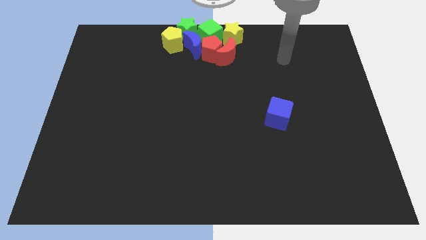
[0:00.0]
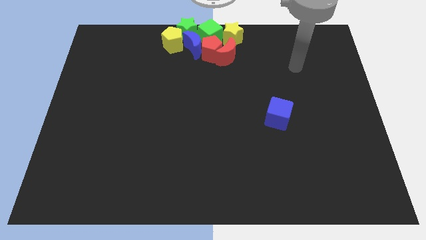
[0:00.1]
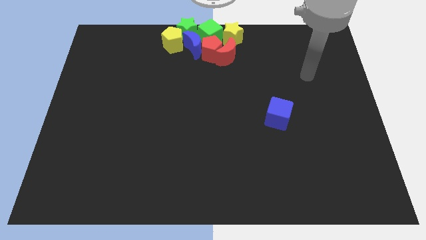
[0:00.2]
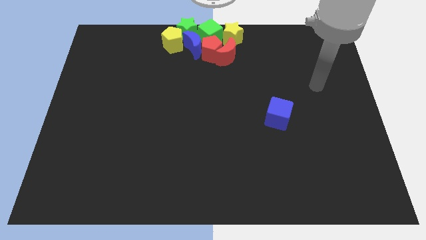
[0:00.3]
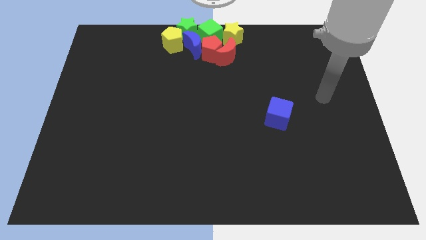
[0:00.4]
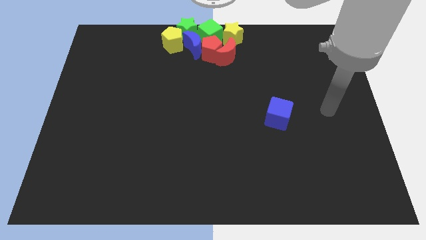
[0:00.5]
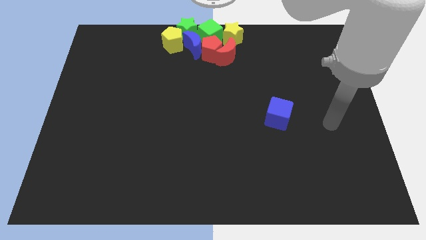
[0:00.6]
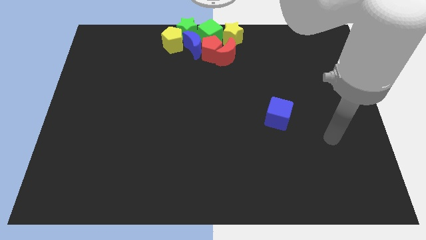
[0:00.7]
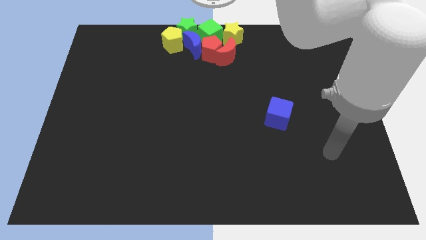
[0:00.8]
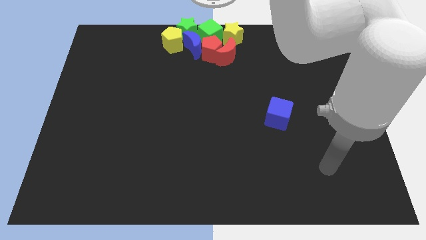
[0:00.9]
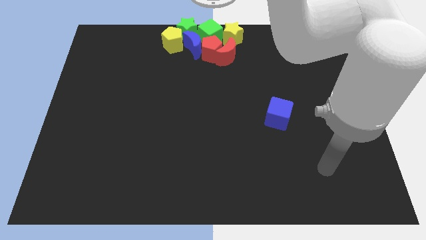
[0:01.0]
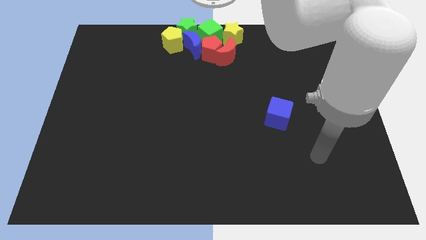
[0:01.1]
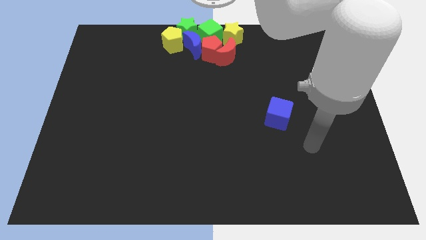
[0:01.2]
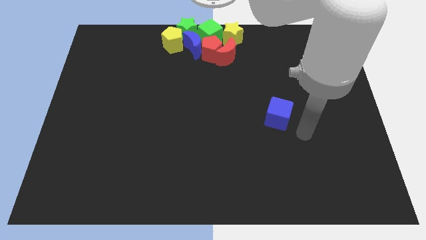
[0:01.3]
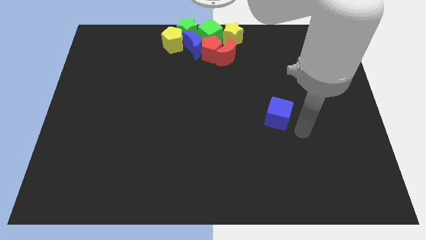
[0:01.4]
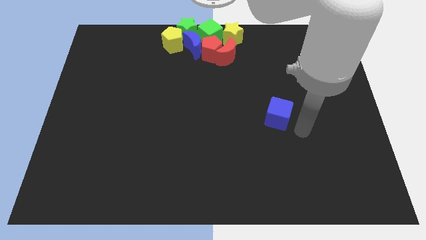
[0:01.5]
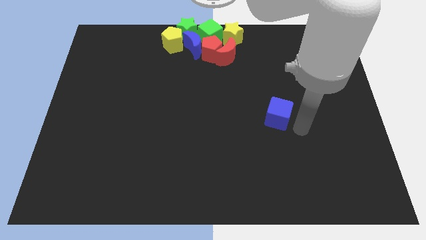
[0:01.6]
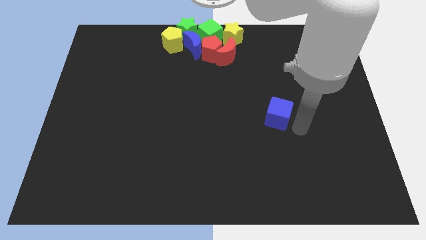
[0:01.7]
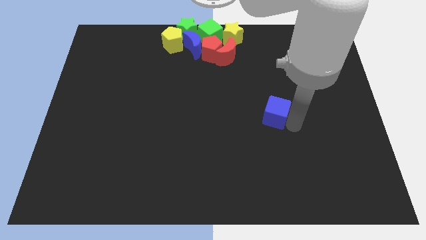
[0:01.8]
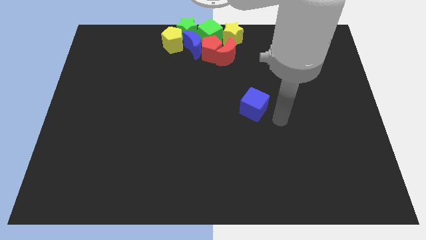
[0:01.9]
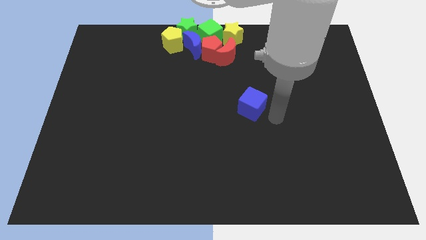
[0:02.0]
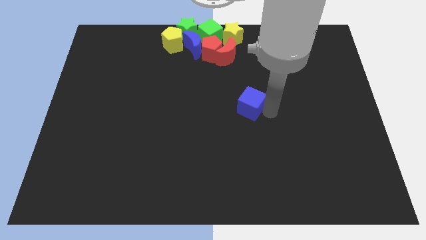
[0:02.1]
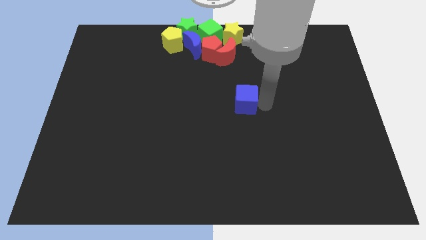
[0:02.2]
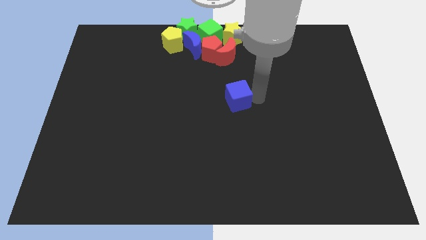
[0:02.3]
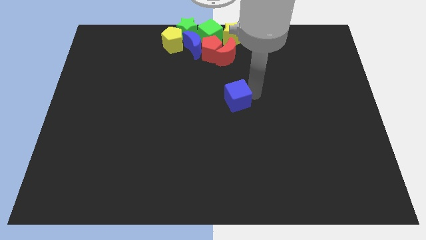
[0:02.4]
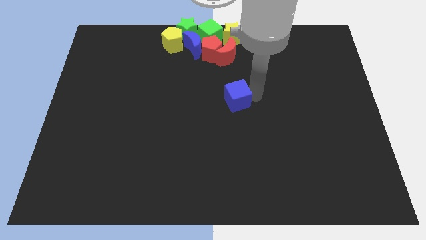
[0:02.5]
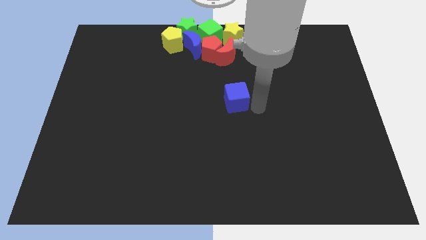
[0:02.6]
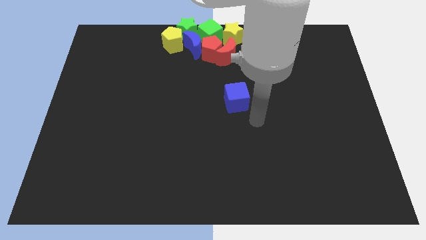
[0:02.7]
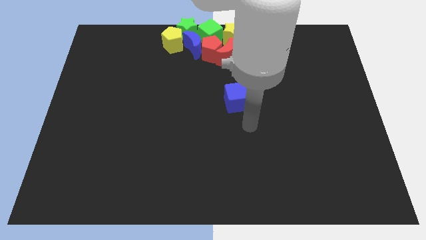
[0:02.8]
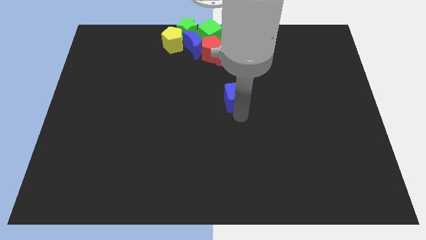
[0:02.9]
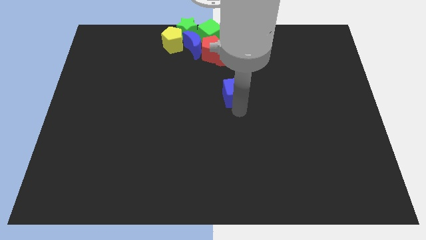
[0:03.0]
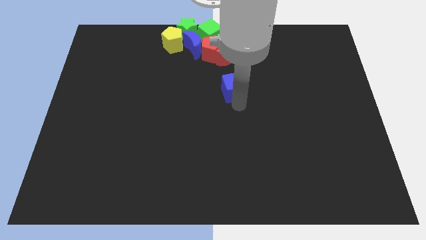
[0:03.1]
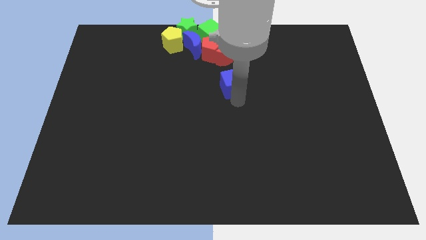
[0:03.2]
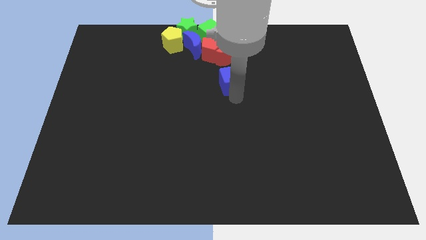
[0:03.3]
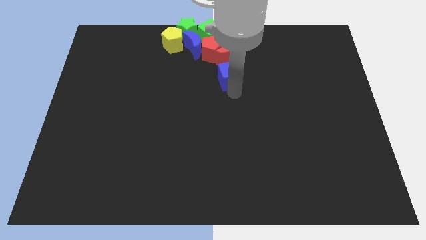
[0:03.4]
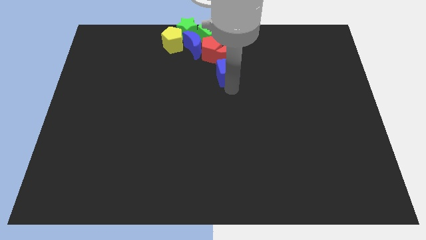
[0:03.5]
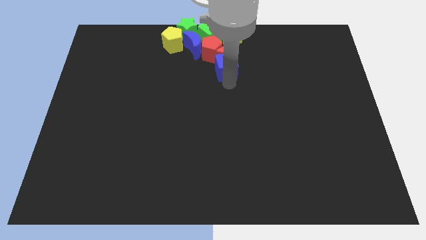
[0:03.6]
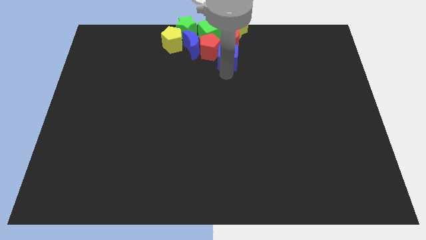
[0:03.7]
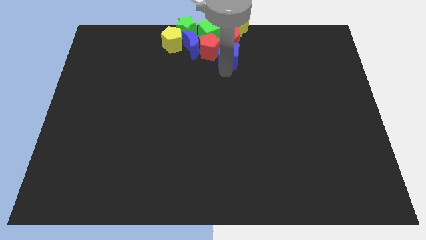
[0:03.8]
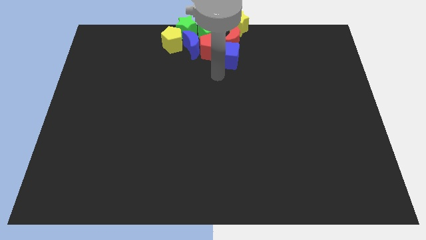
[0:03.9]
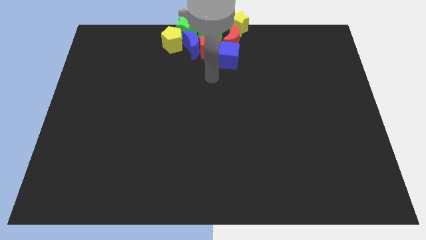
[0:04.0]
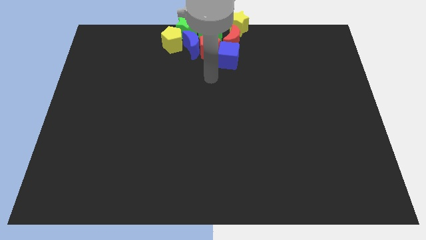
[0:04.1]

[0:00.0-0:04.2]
push the blue cube to the bottom side of the red moon

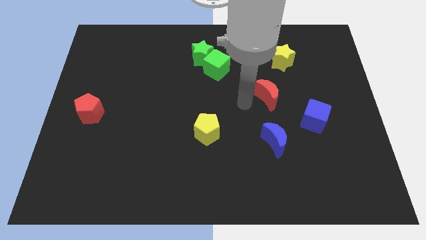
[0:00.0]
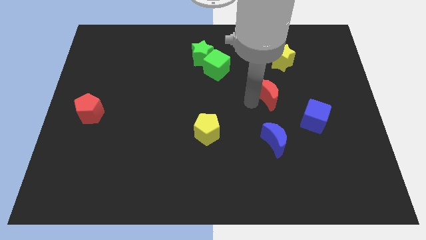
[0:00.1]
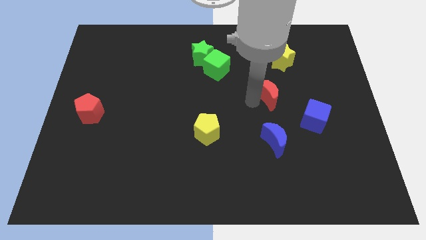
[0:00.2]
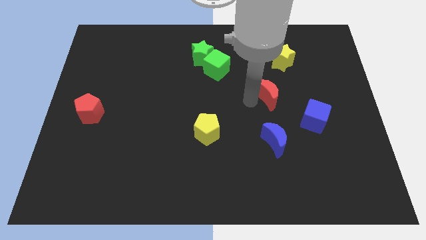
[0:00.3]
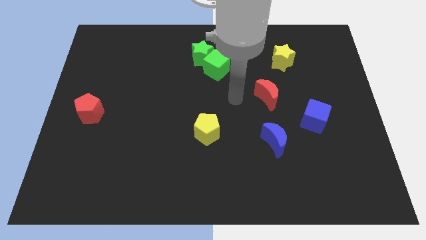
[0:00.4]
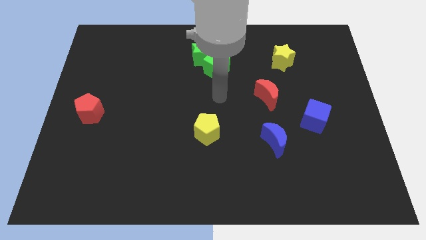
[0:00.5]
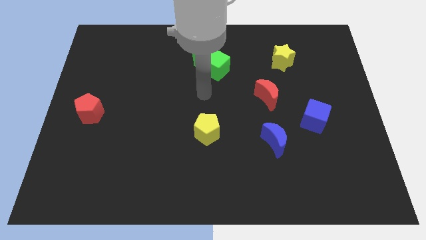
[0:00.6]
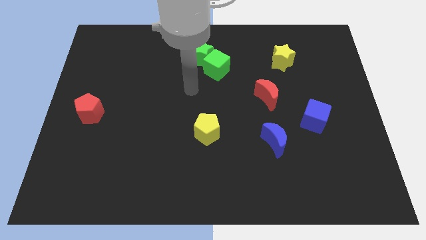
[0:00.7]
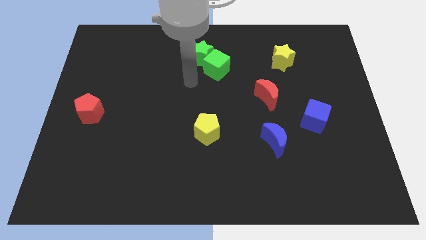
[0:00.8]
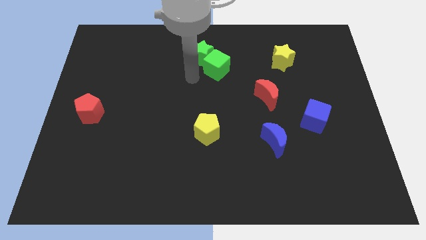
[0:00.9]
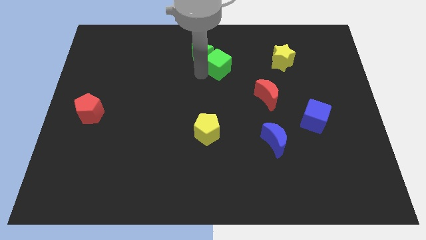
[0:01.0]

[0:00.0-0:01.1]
place the arm to the left of the green cube

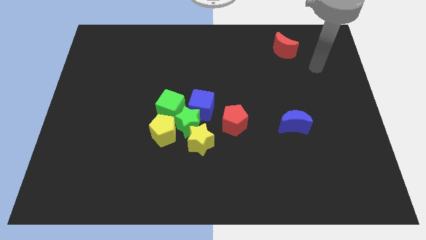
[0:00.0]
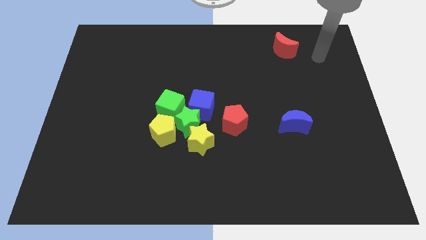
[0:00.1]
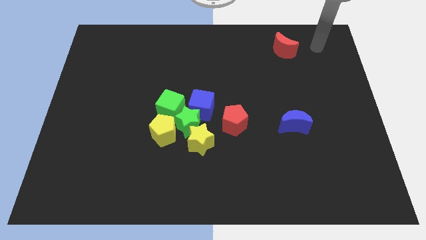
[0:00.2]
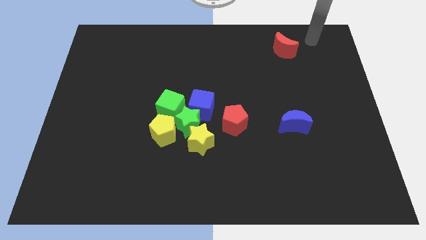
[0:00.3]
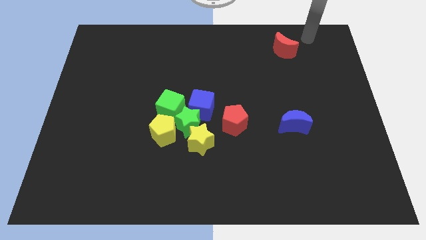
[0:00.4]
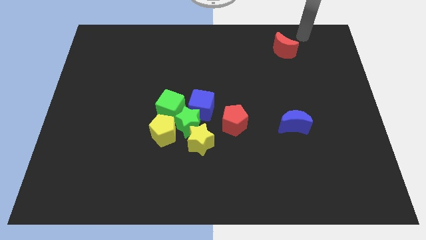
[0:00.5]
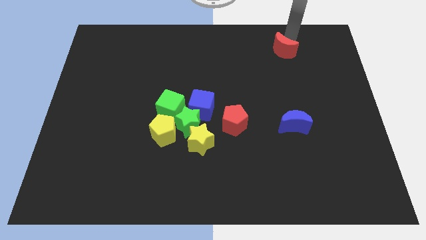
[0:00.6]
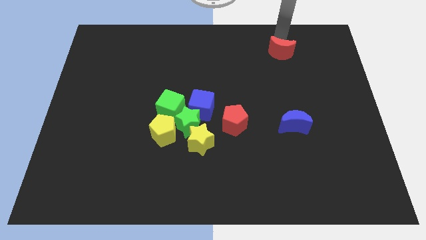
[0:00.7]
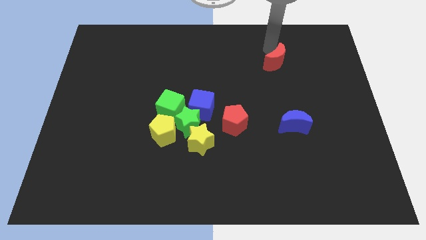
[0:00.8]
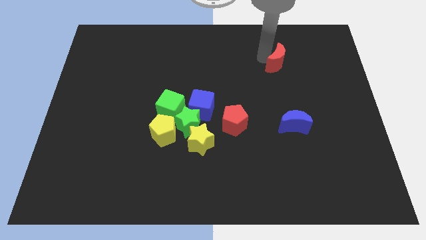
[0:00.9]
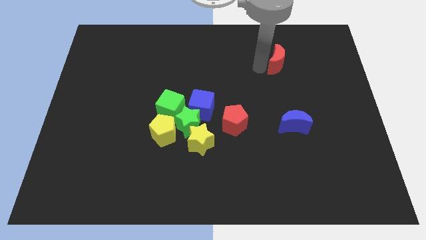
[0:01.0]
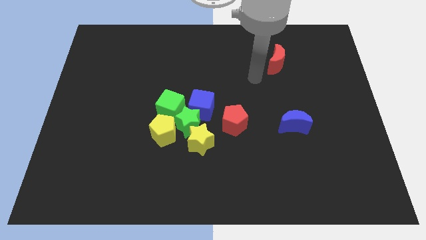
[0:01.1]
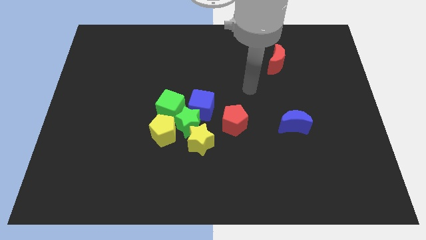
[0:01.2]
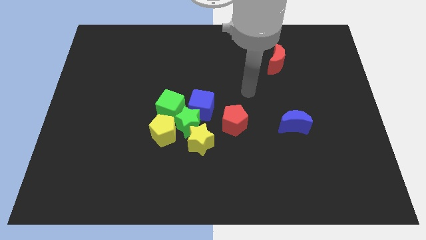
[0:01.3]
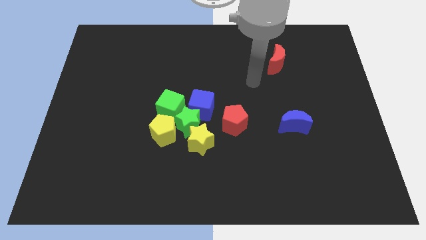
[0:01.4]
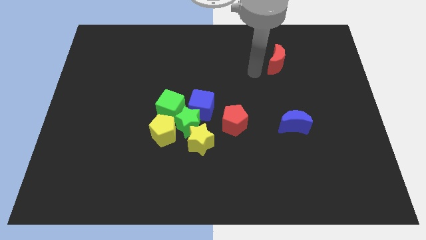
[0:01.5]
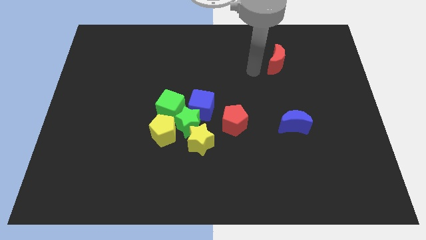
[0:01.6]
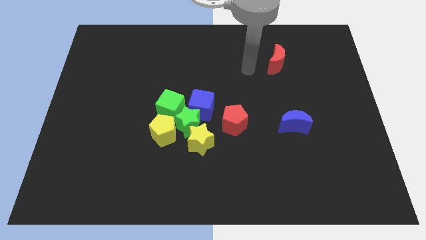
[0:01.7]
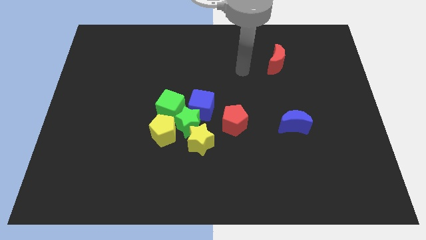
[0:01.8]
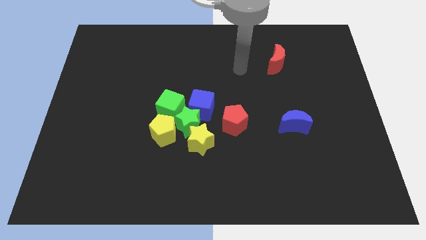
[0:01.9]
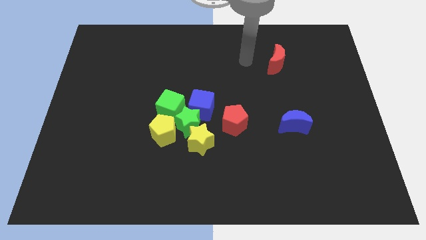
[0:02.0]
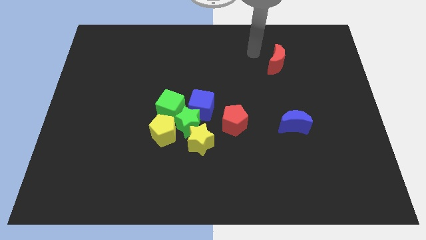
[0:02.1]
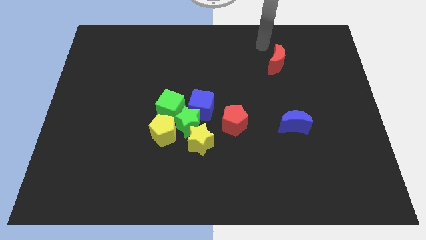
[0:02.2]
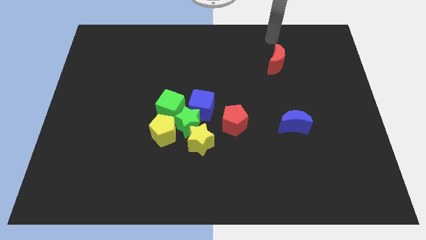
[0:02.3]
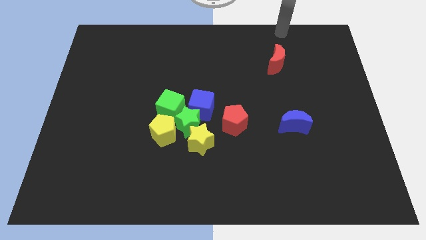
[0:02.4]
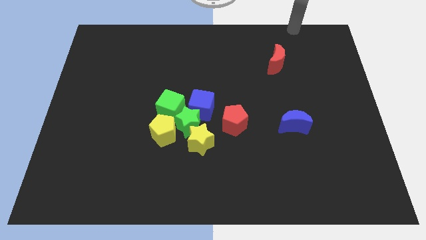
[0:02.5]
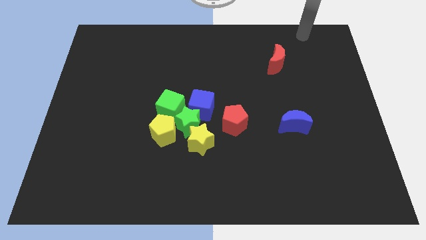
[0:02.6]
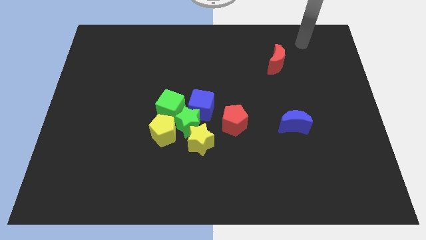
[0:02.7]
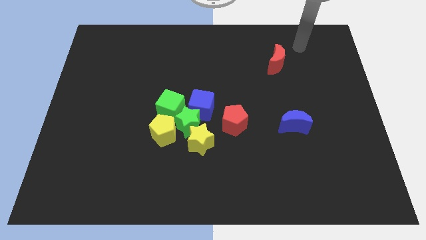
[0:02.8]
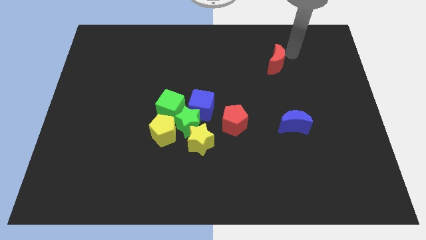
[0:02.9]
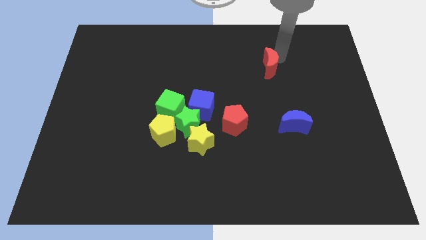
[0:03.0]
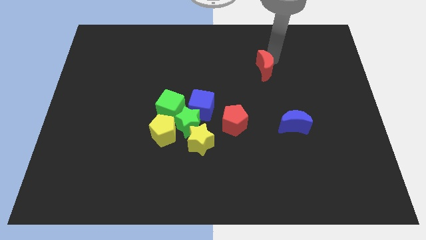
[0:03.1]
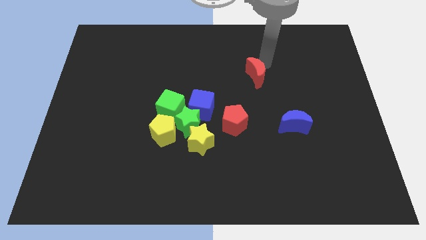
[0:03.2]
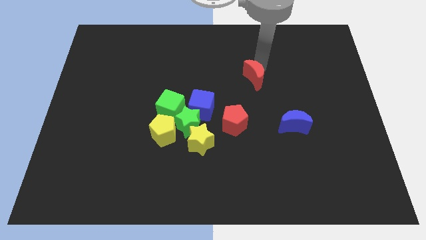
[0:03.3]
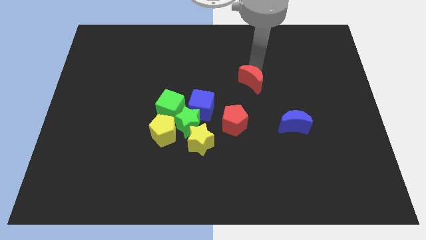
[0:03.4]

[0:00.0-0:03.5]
slide the red moon towards the red pentagon
